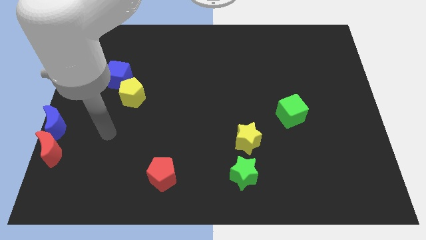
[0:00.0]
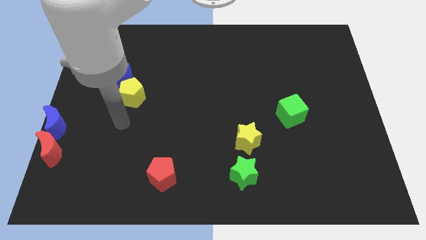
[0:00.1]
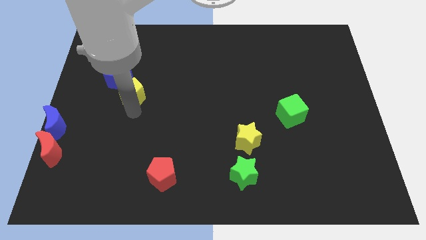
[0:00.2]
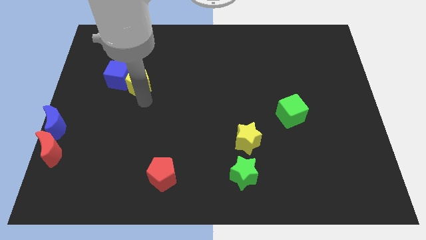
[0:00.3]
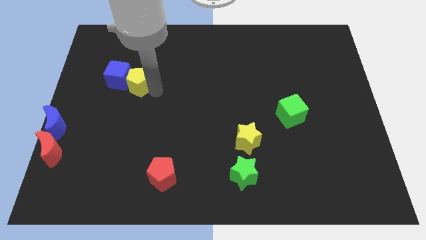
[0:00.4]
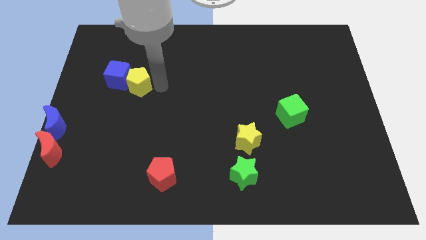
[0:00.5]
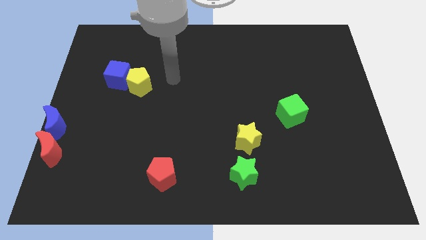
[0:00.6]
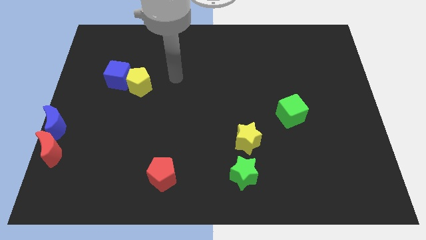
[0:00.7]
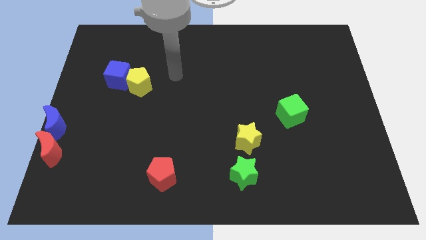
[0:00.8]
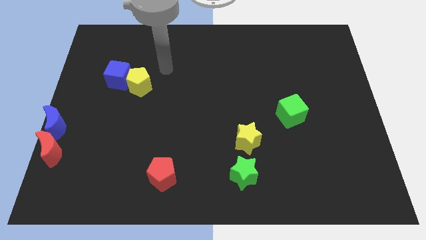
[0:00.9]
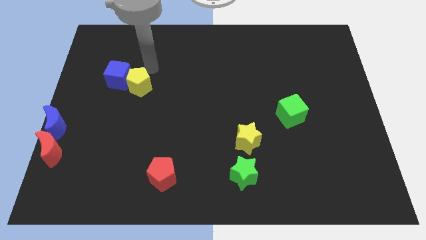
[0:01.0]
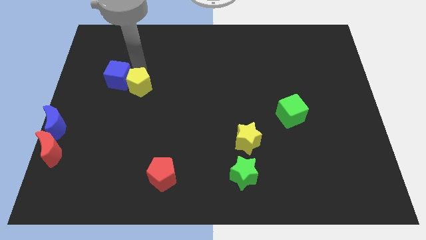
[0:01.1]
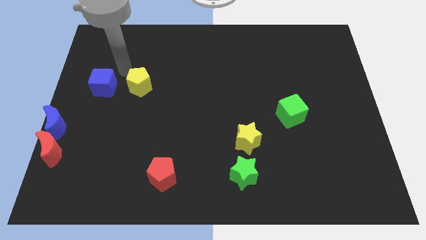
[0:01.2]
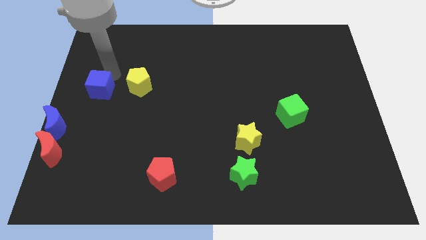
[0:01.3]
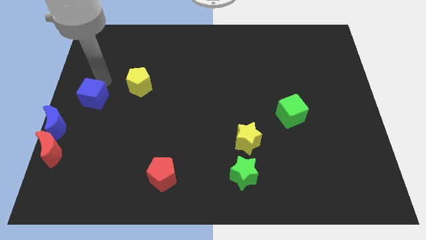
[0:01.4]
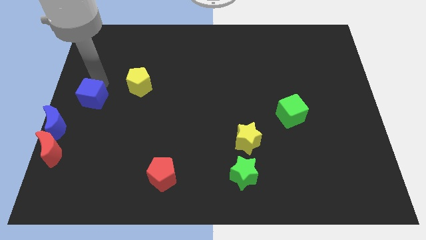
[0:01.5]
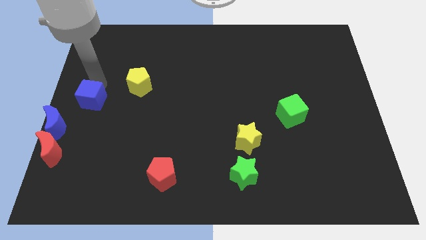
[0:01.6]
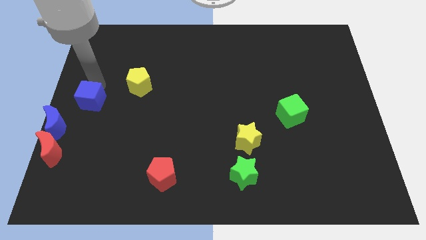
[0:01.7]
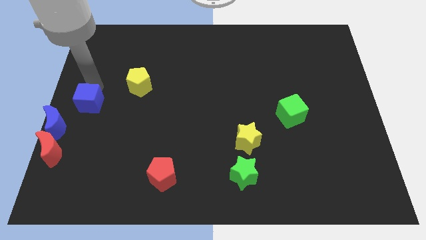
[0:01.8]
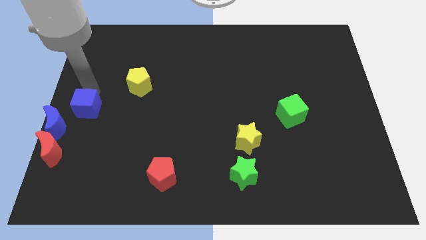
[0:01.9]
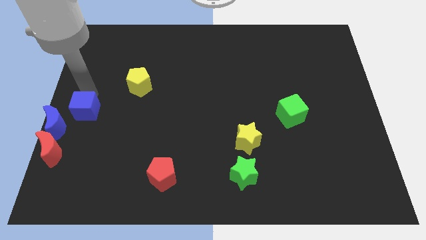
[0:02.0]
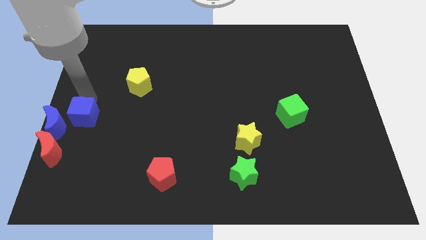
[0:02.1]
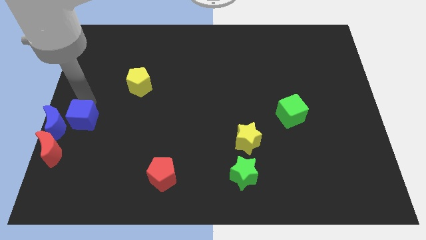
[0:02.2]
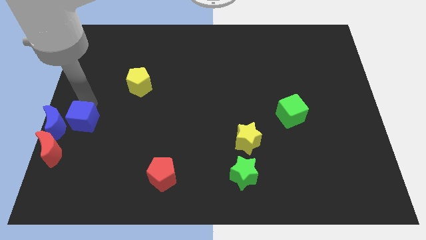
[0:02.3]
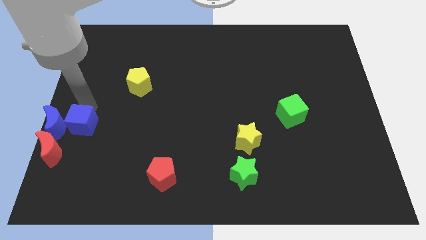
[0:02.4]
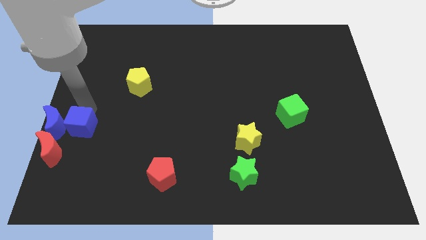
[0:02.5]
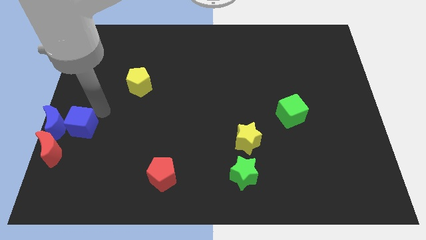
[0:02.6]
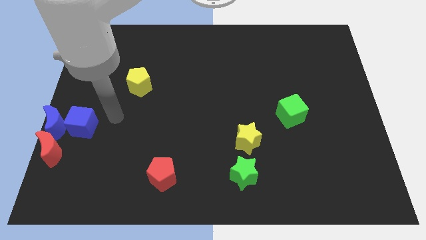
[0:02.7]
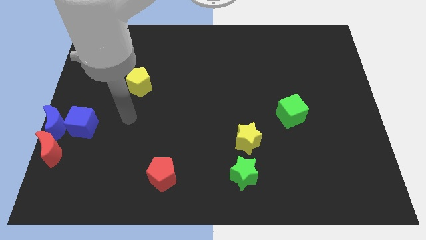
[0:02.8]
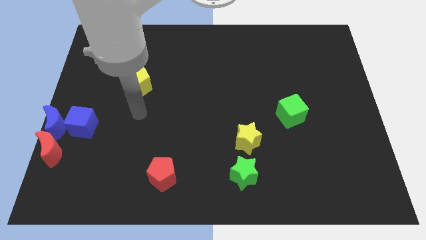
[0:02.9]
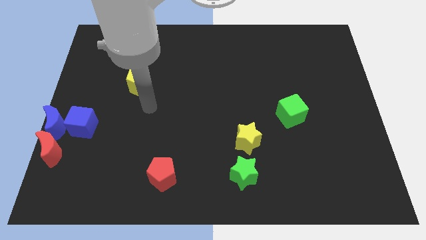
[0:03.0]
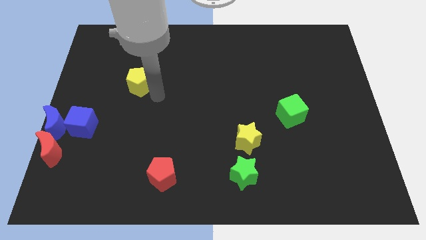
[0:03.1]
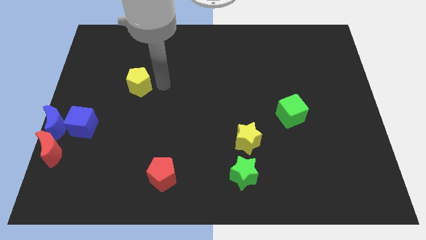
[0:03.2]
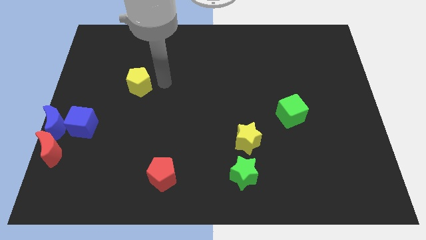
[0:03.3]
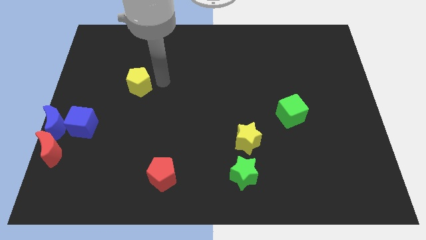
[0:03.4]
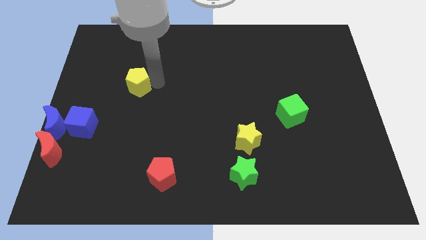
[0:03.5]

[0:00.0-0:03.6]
push the blue cube to the right side of the blue crescent

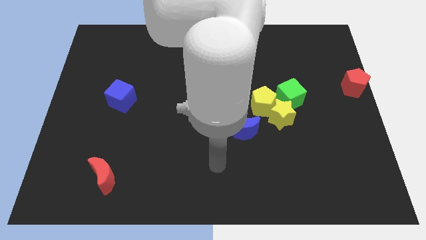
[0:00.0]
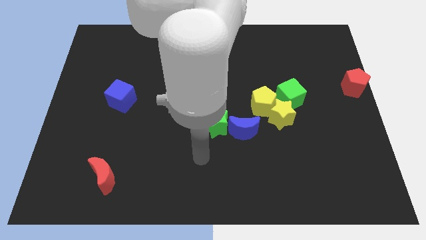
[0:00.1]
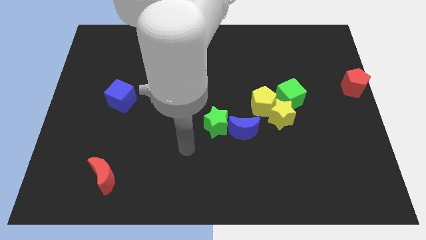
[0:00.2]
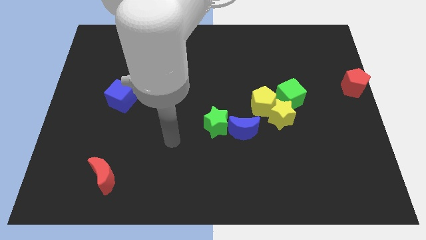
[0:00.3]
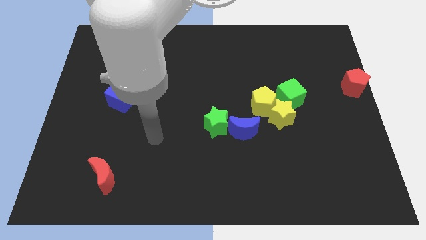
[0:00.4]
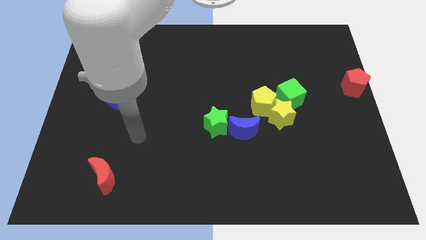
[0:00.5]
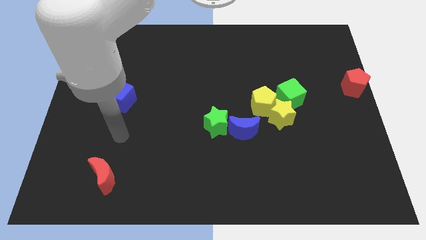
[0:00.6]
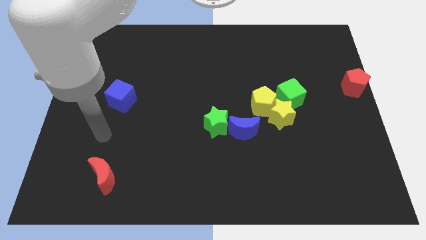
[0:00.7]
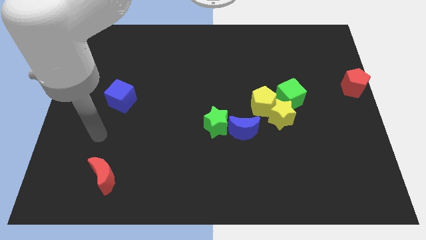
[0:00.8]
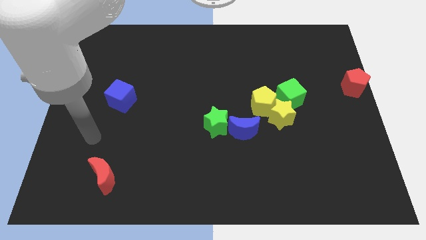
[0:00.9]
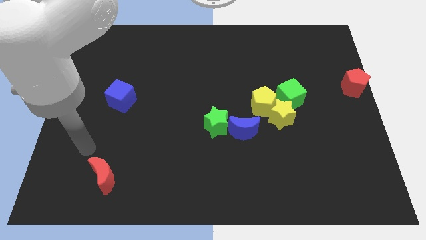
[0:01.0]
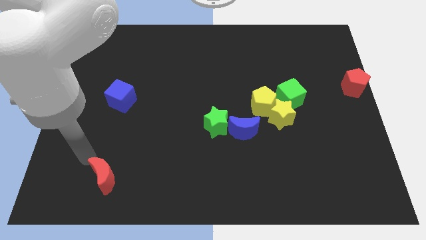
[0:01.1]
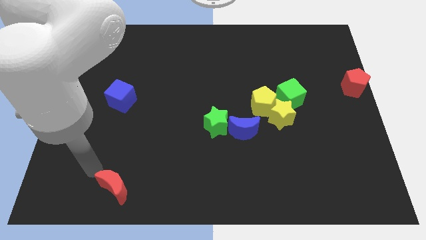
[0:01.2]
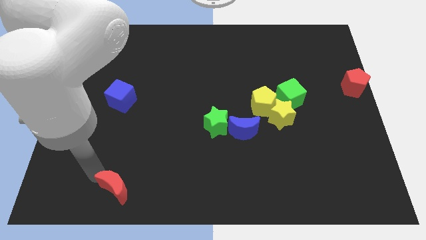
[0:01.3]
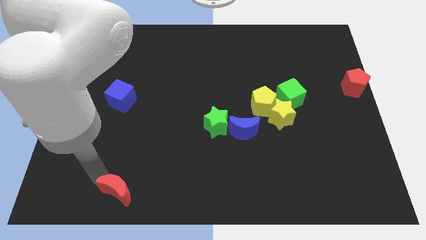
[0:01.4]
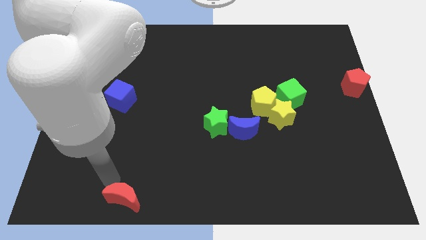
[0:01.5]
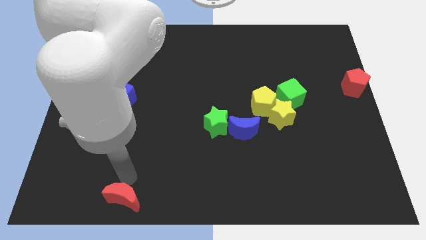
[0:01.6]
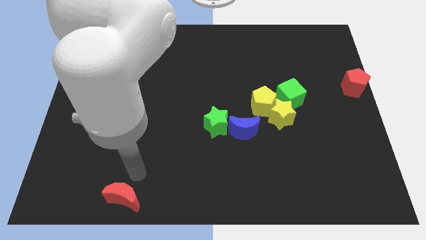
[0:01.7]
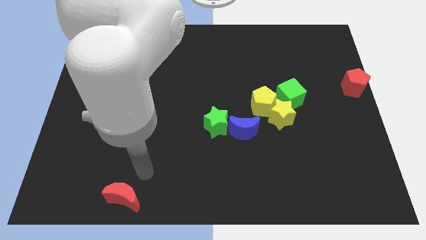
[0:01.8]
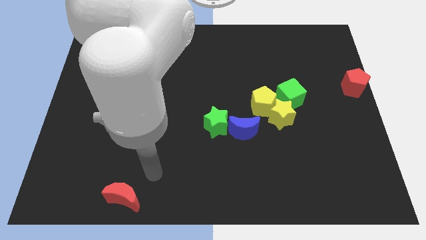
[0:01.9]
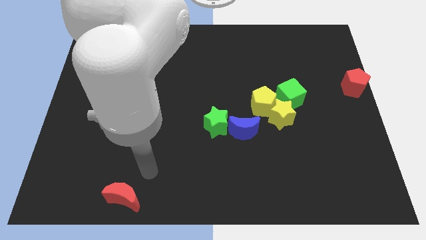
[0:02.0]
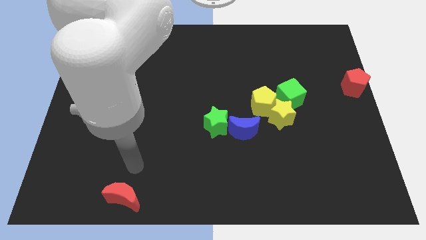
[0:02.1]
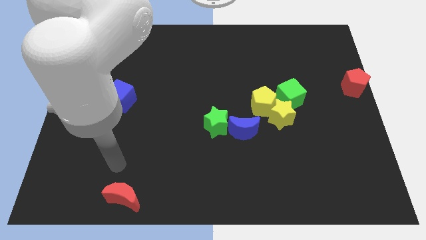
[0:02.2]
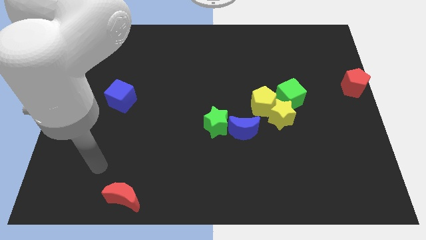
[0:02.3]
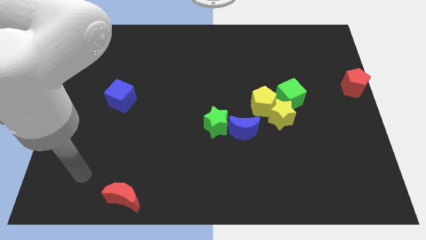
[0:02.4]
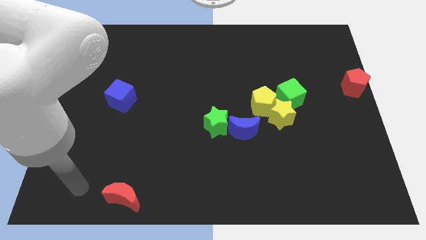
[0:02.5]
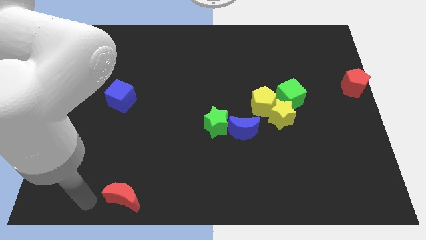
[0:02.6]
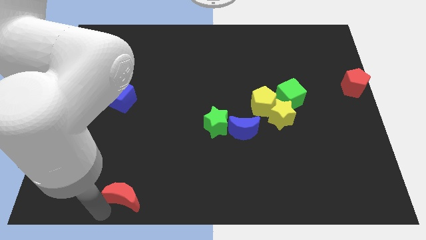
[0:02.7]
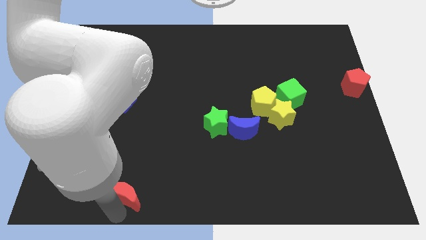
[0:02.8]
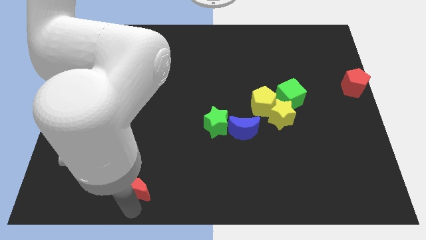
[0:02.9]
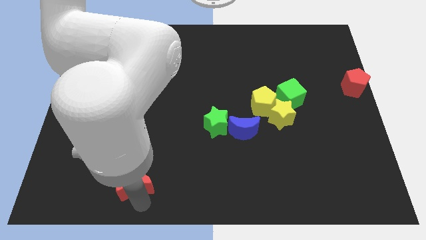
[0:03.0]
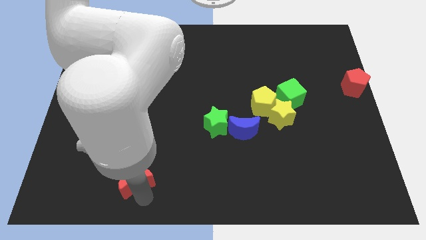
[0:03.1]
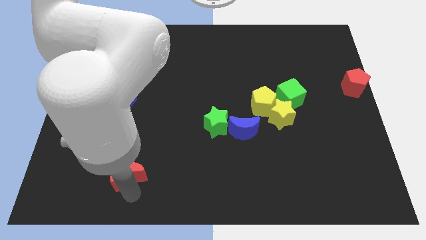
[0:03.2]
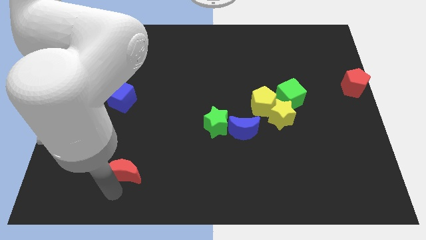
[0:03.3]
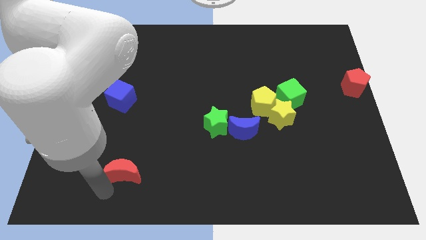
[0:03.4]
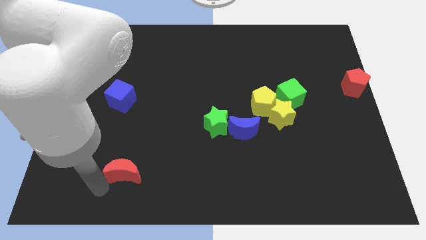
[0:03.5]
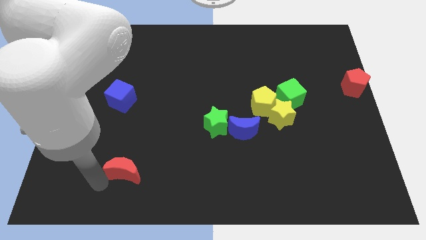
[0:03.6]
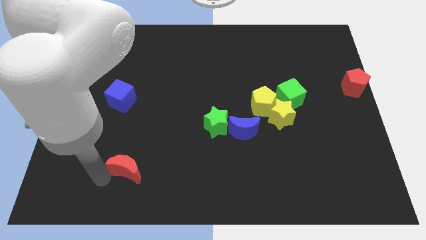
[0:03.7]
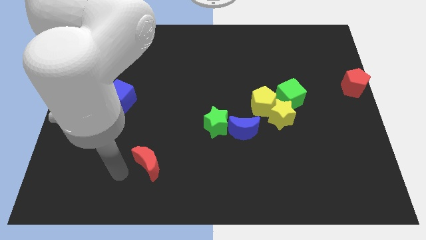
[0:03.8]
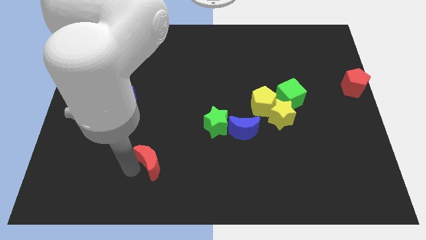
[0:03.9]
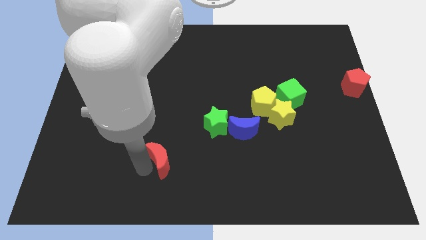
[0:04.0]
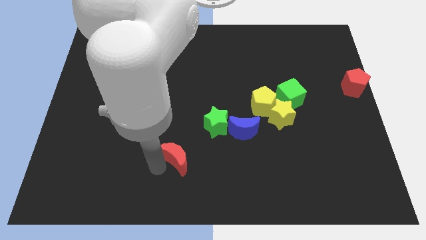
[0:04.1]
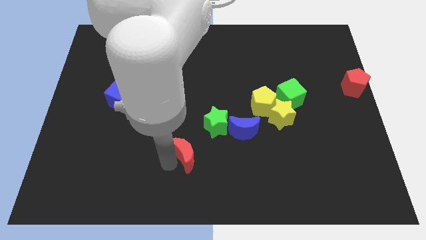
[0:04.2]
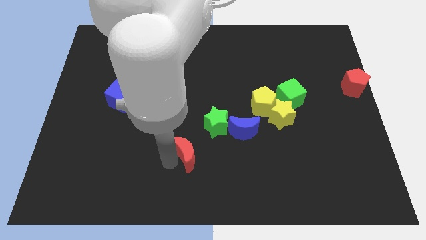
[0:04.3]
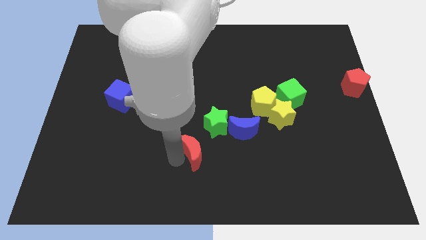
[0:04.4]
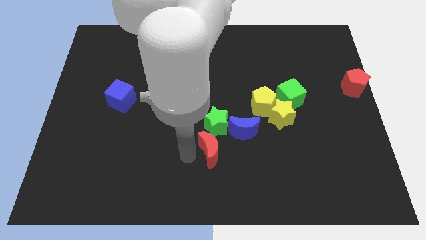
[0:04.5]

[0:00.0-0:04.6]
place the red moon below the green star

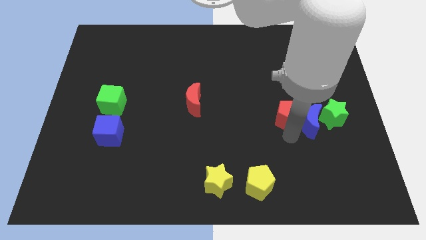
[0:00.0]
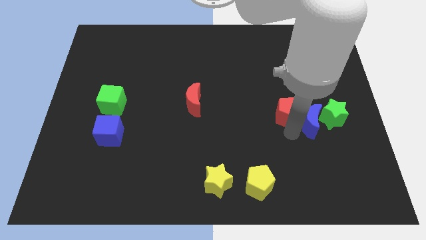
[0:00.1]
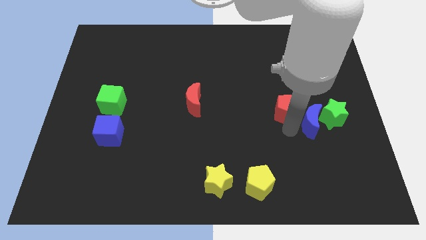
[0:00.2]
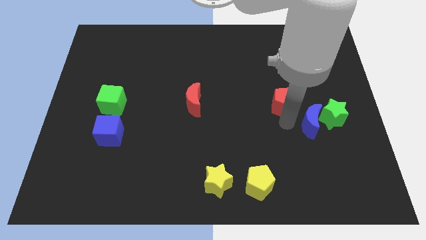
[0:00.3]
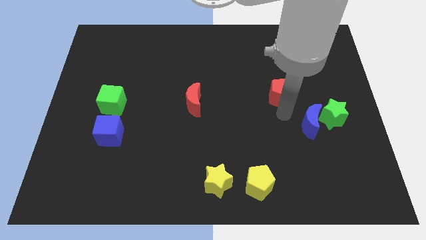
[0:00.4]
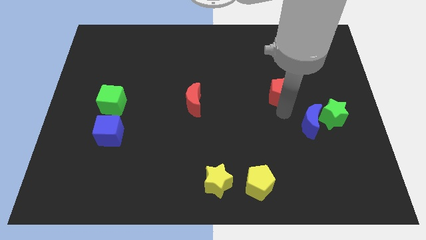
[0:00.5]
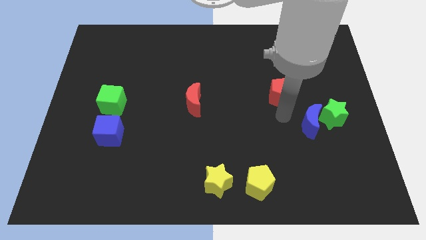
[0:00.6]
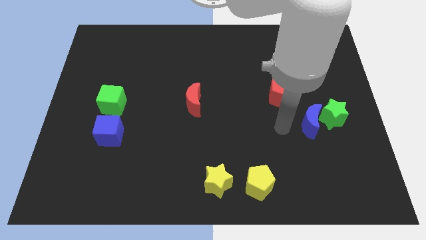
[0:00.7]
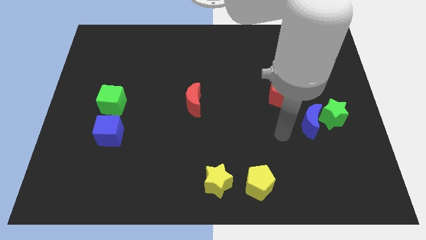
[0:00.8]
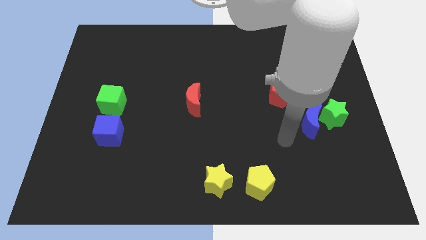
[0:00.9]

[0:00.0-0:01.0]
push the red pentagon to the right of the red crescent
